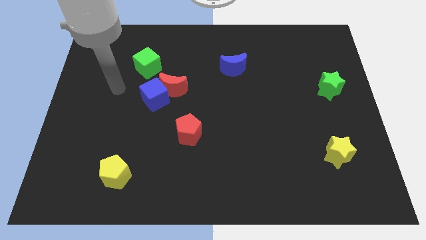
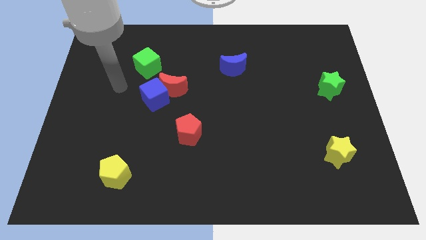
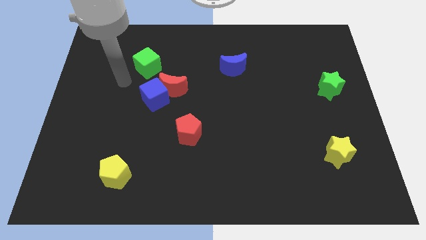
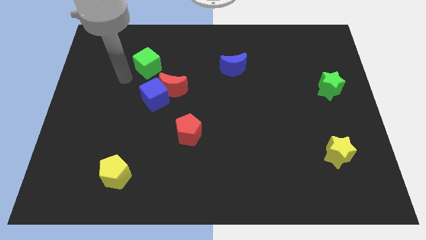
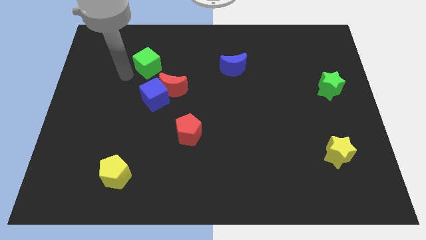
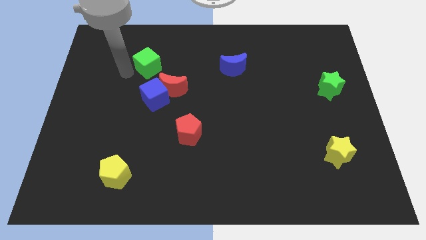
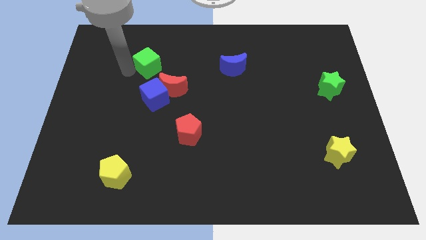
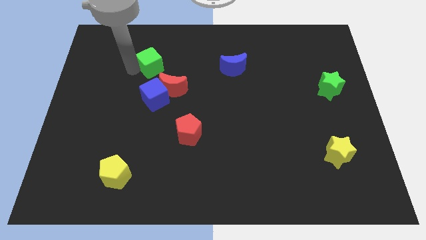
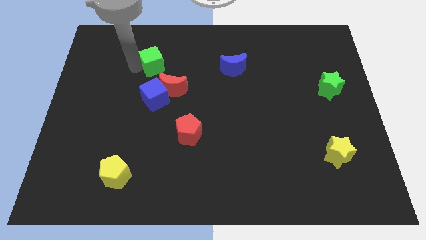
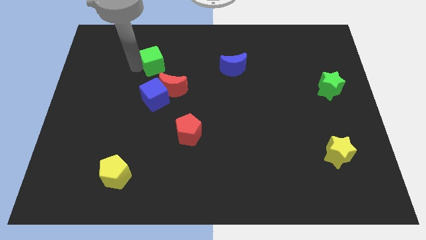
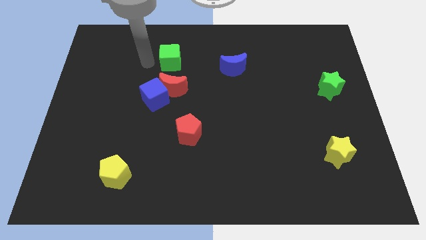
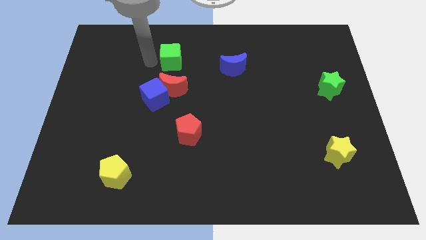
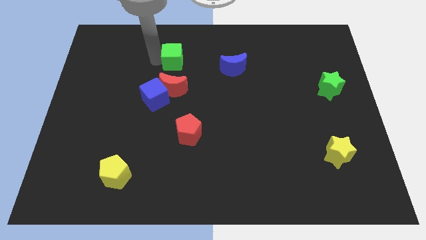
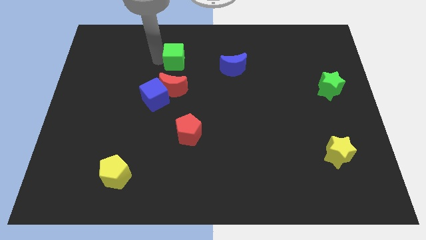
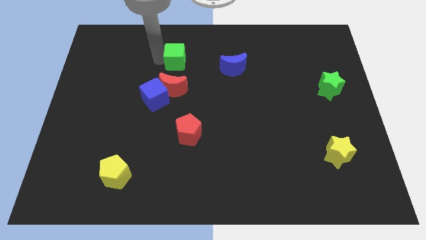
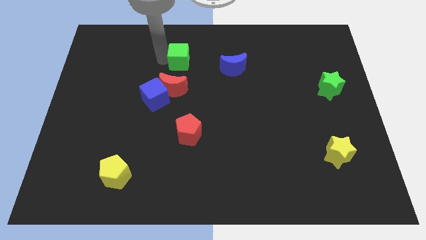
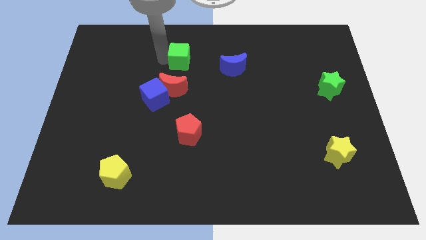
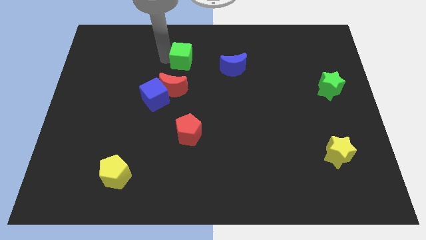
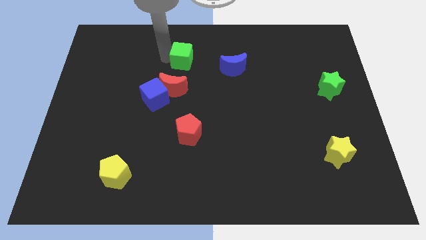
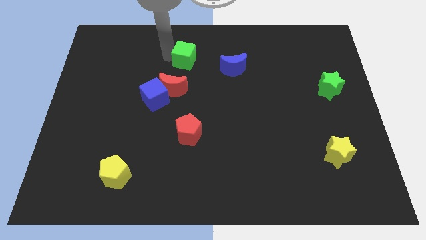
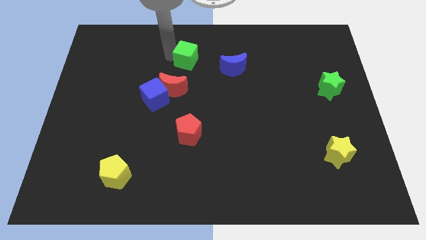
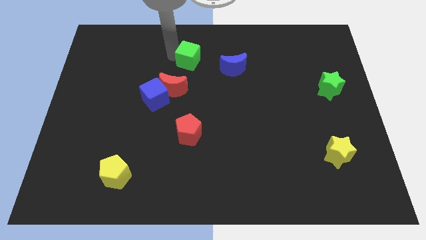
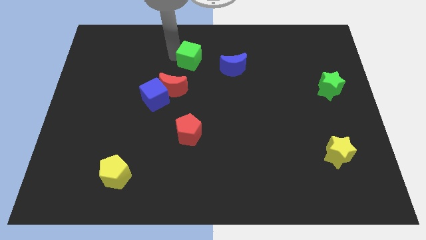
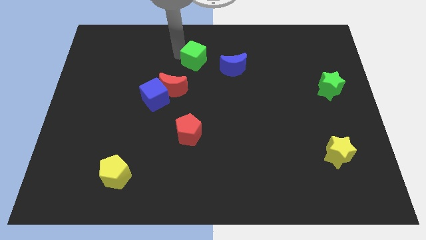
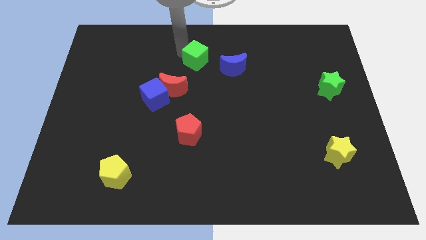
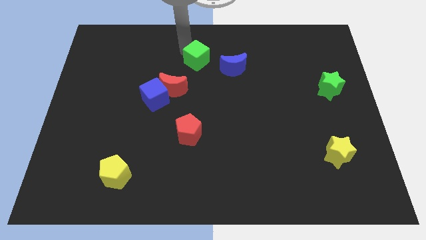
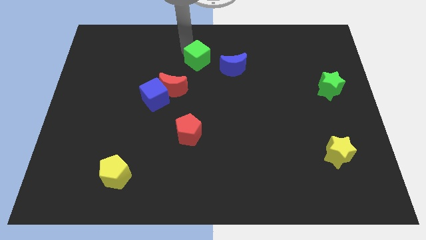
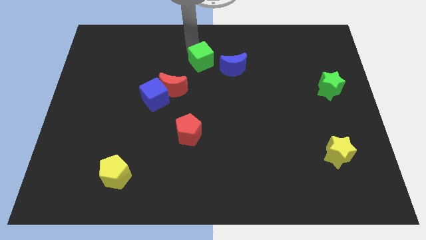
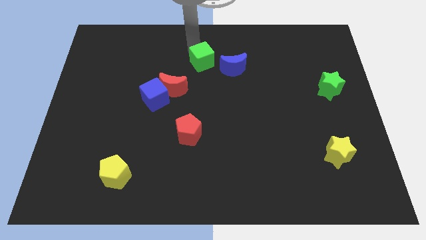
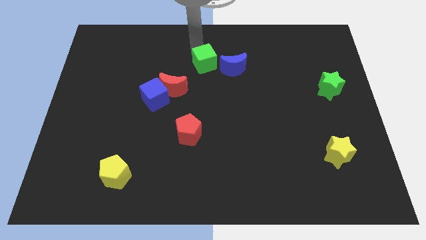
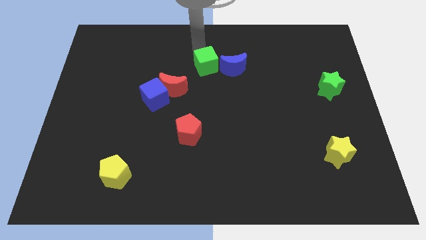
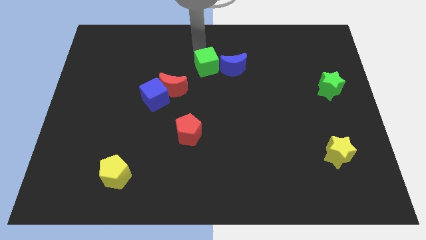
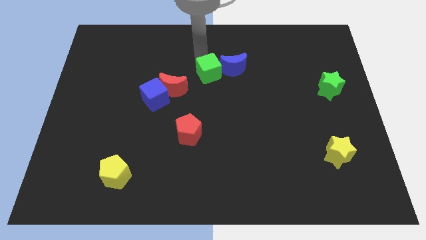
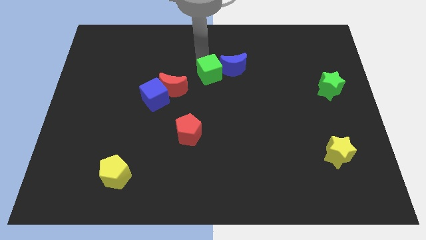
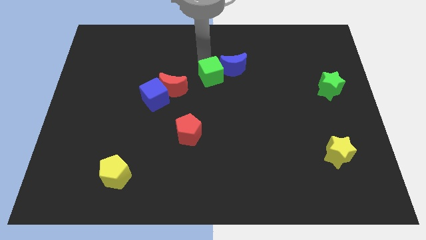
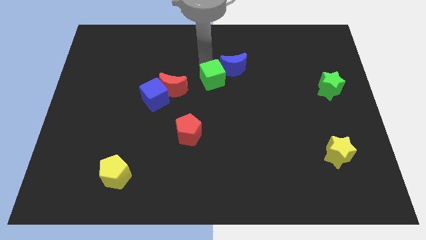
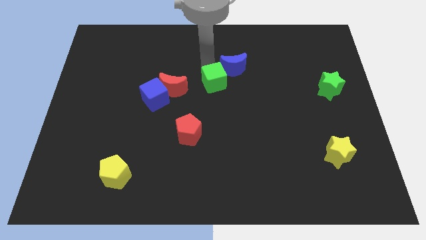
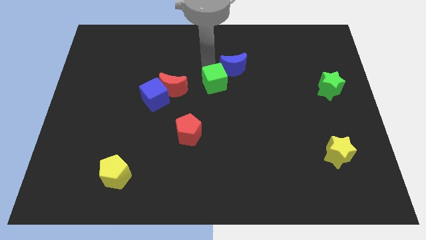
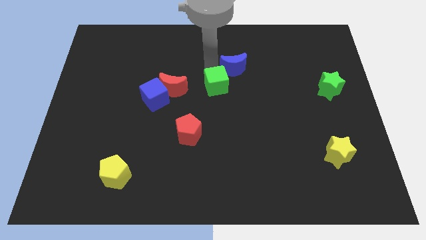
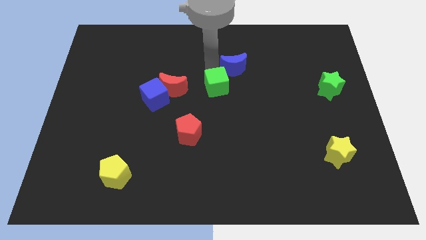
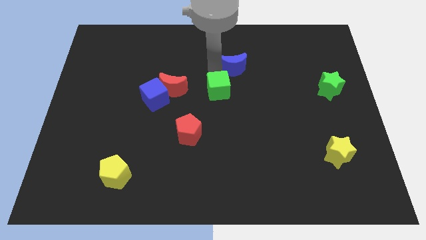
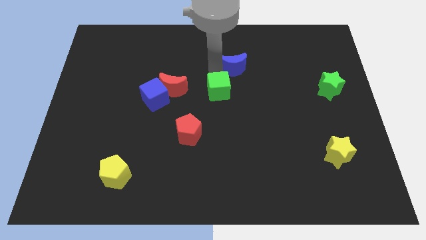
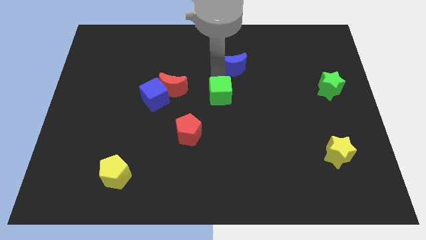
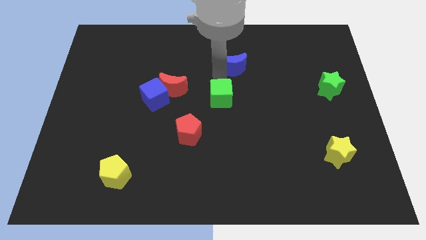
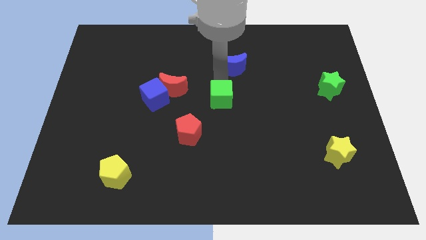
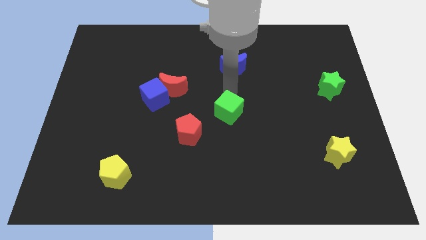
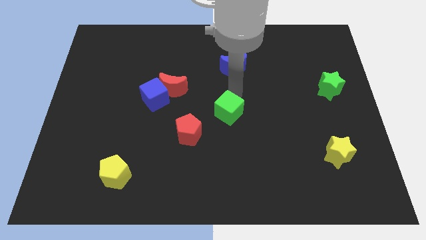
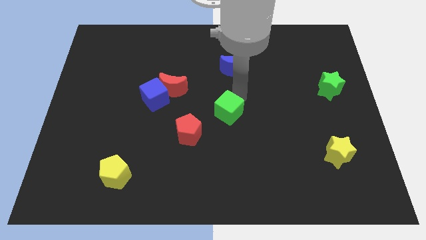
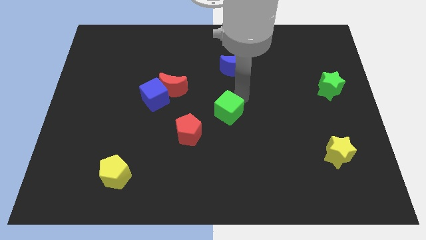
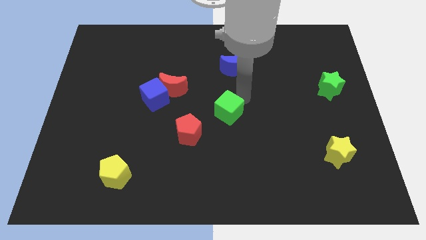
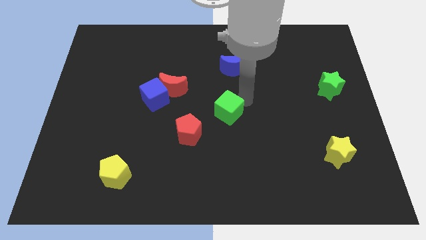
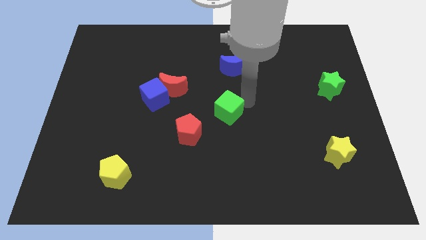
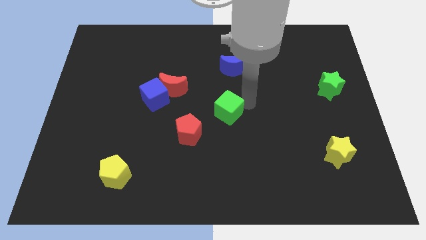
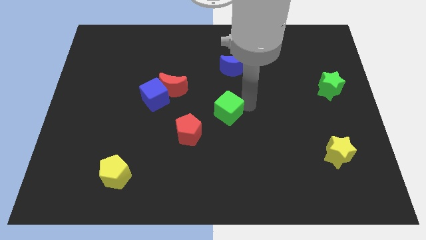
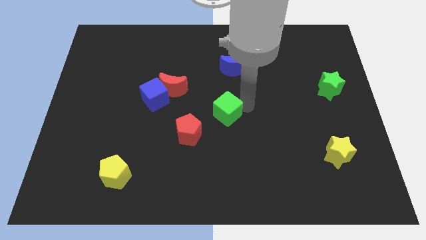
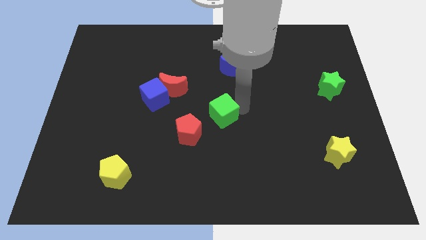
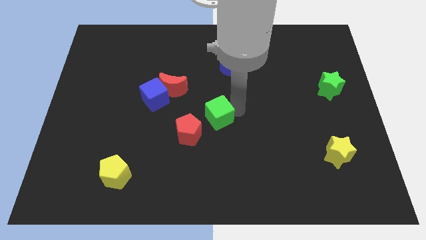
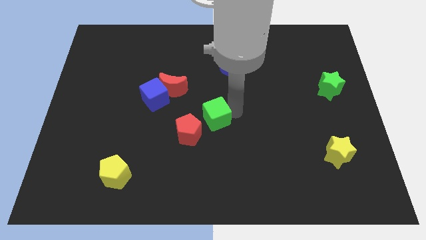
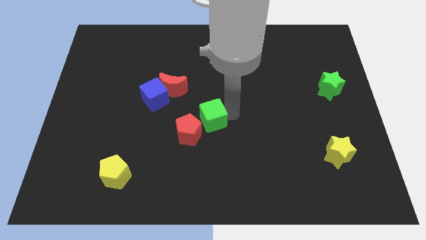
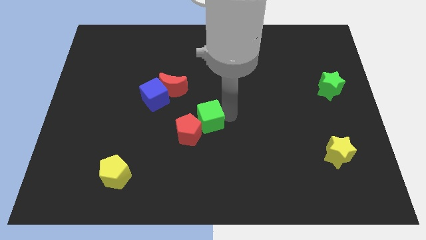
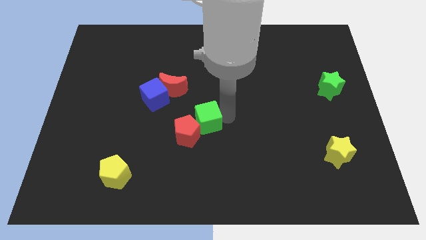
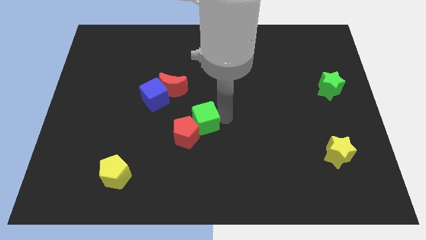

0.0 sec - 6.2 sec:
put the green cube to the red pentagon

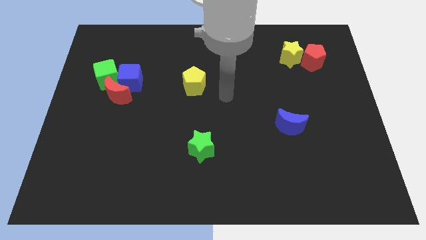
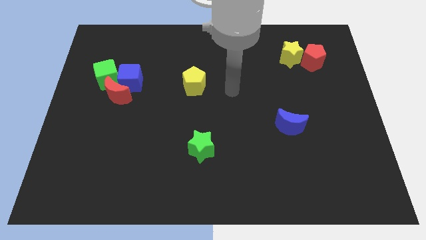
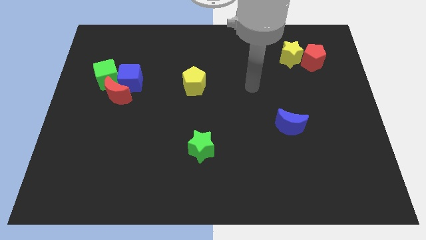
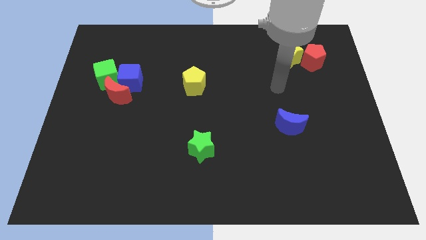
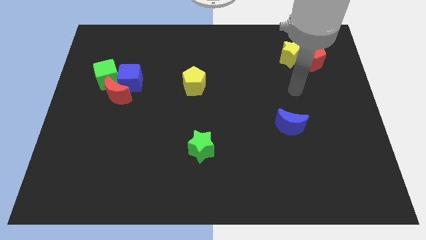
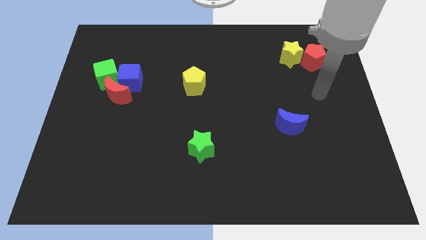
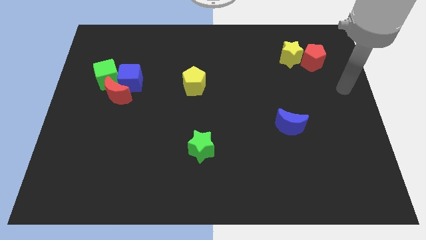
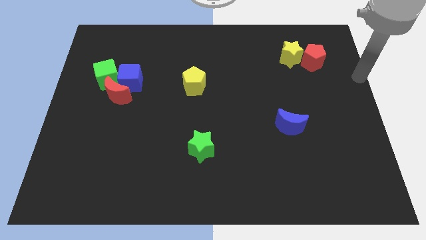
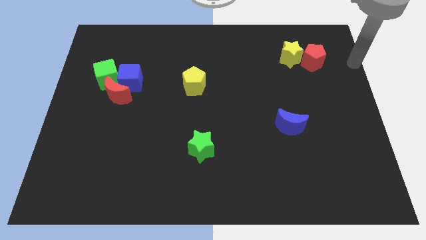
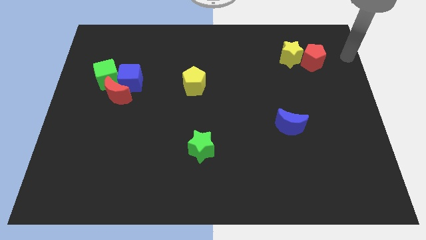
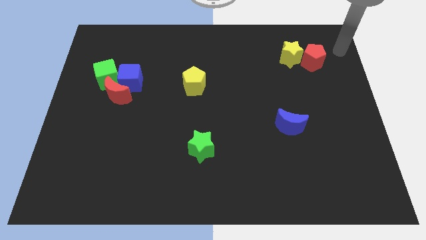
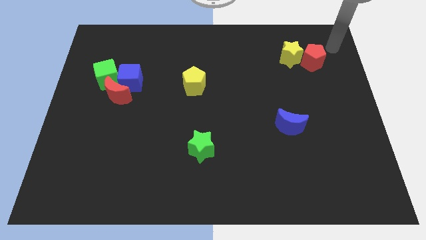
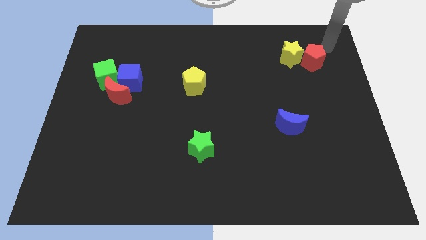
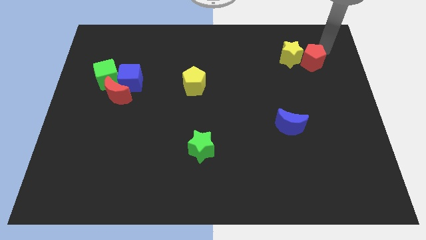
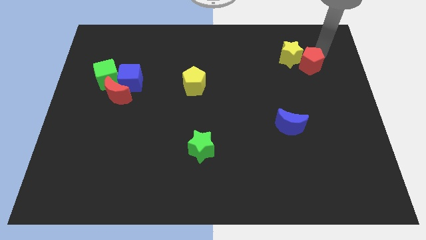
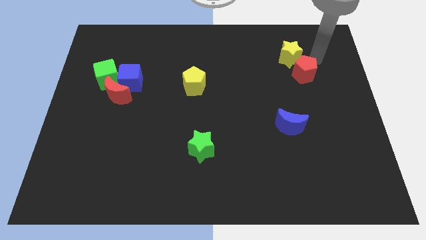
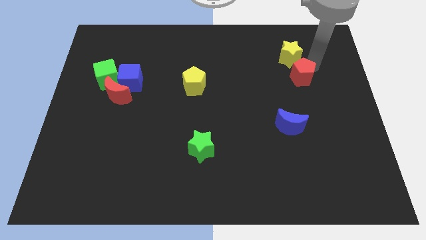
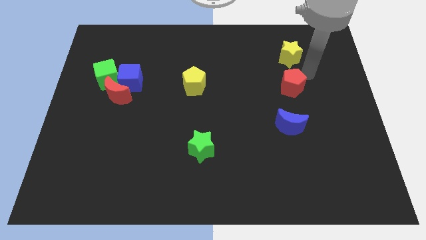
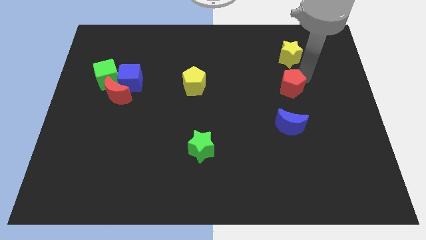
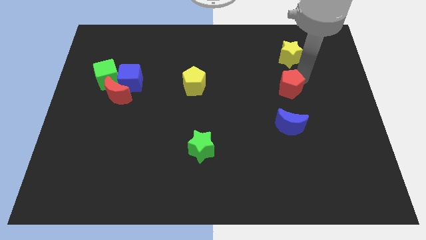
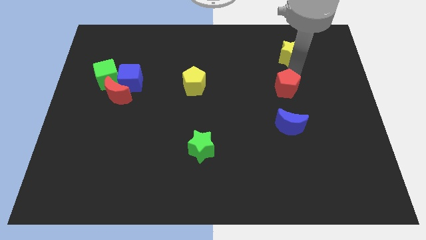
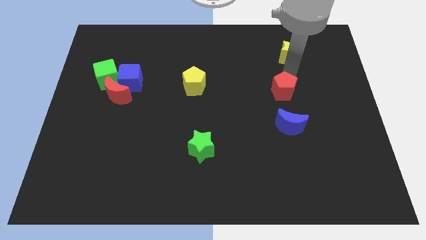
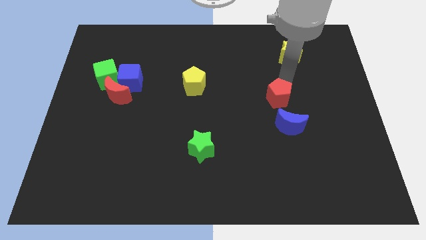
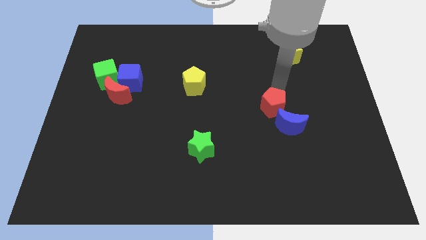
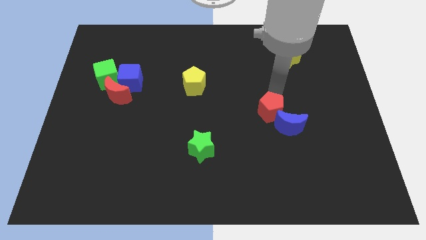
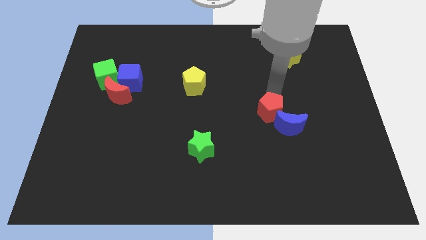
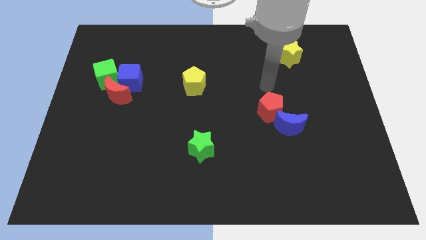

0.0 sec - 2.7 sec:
slide the red pentagon towards the blue moon
